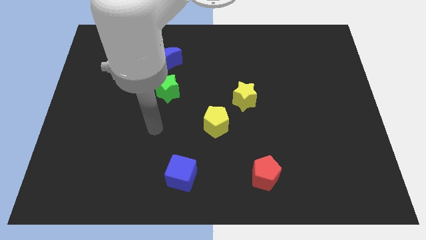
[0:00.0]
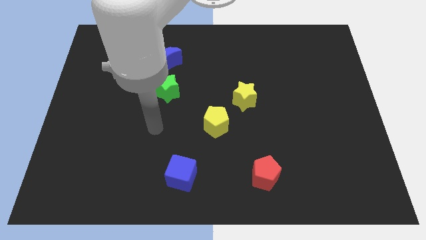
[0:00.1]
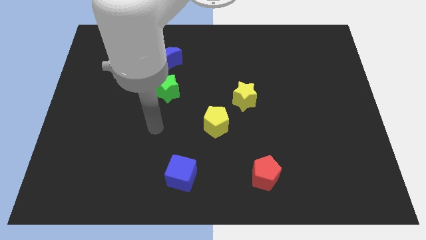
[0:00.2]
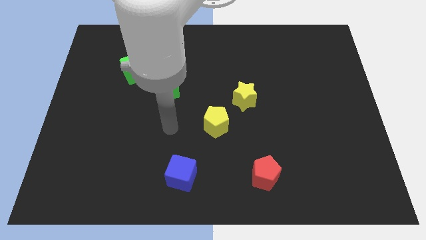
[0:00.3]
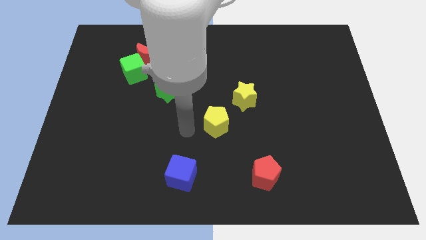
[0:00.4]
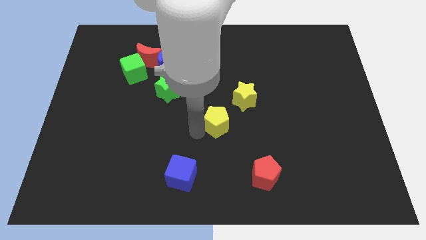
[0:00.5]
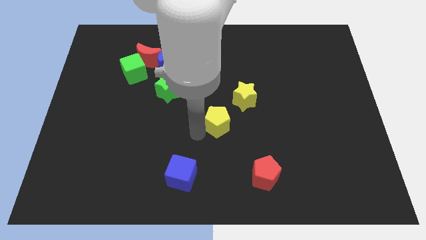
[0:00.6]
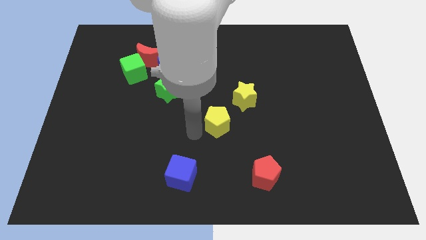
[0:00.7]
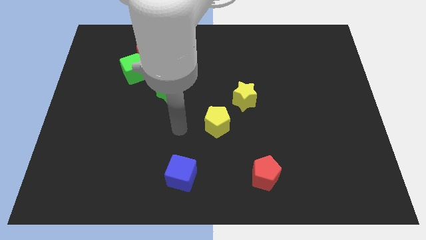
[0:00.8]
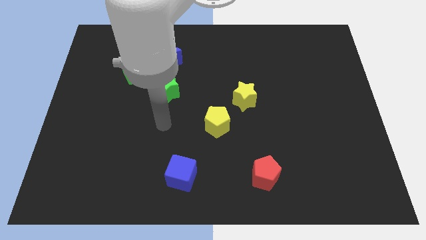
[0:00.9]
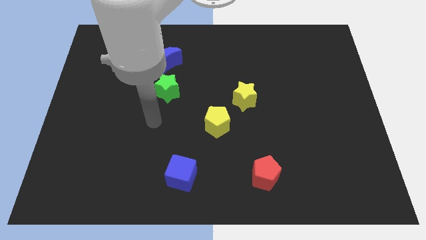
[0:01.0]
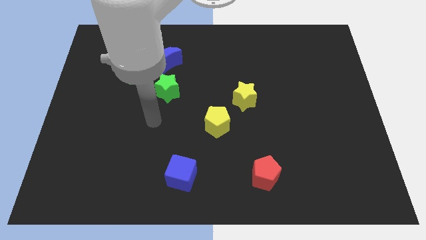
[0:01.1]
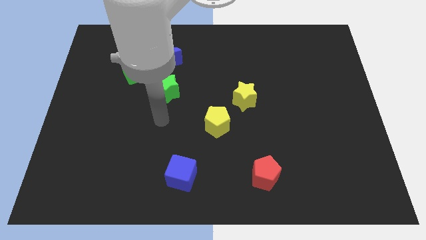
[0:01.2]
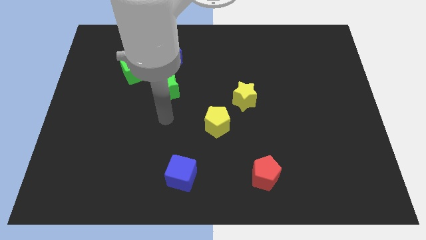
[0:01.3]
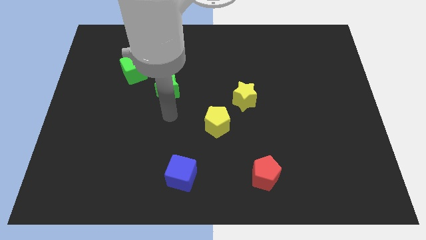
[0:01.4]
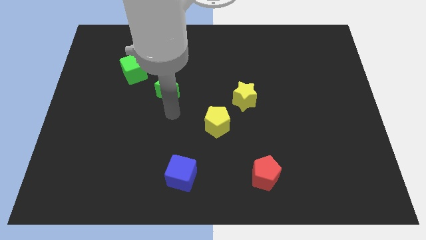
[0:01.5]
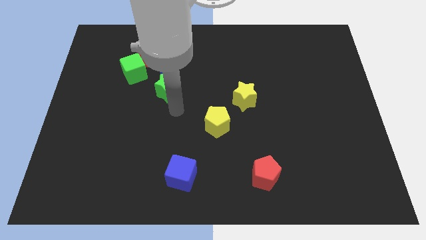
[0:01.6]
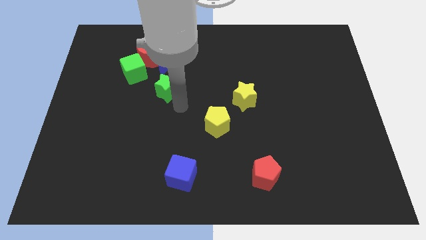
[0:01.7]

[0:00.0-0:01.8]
tap the left side of the yellow pentagon

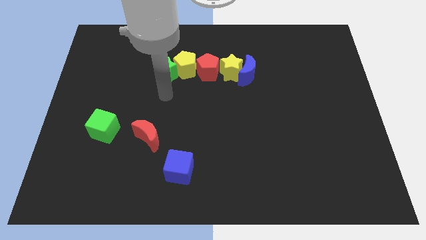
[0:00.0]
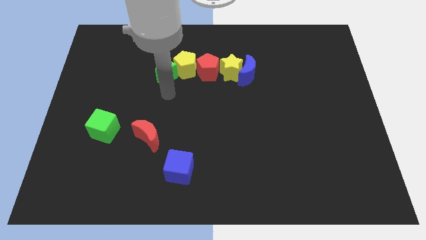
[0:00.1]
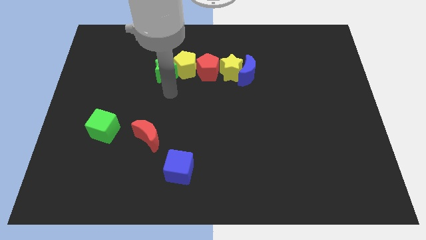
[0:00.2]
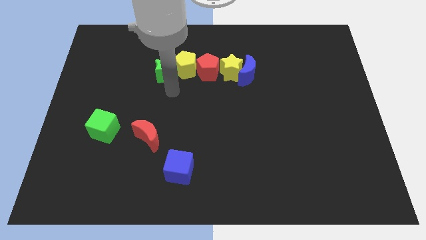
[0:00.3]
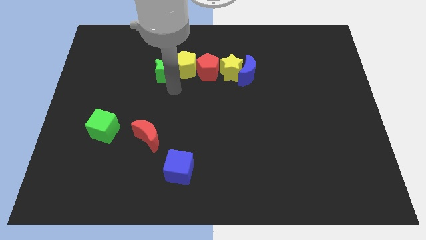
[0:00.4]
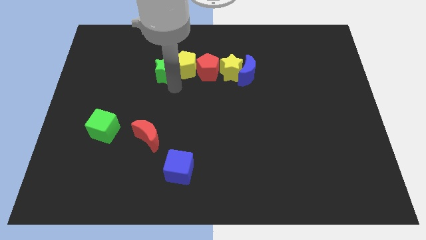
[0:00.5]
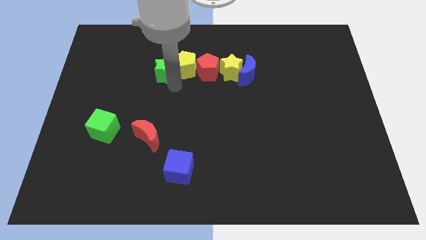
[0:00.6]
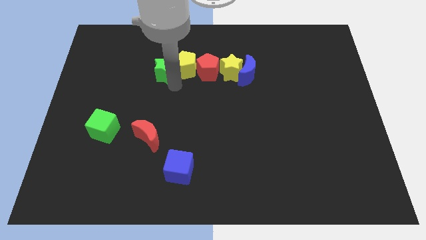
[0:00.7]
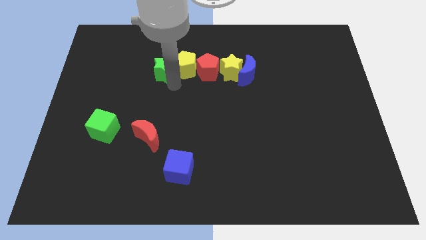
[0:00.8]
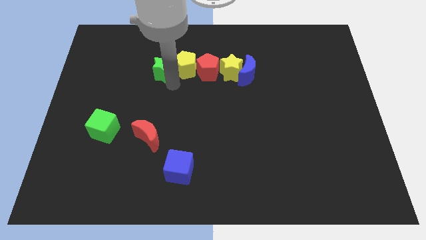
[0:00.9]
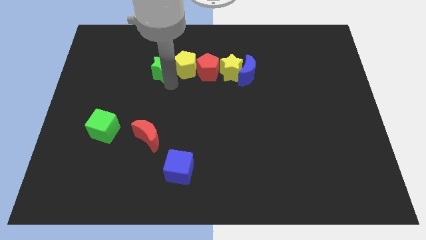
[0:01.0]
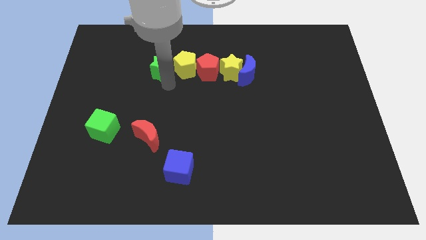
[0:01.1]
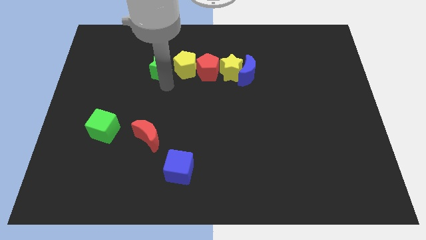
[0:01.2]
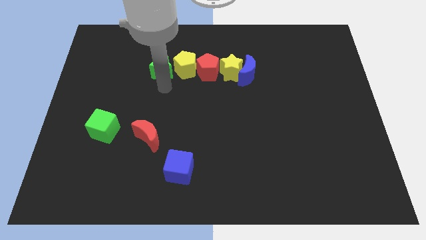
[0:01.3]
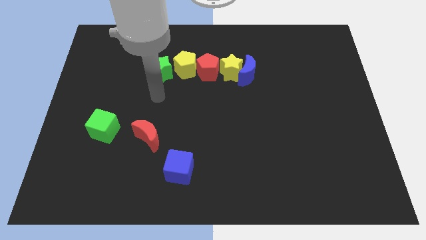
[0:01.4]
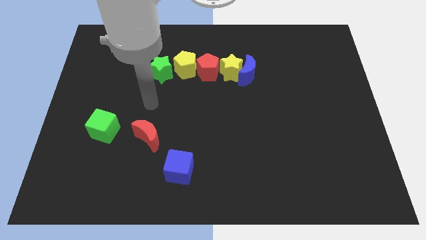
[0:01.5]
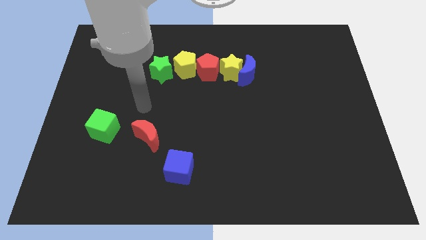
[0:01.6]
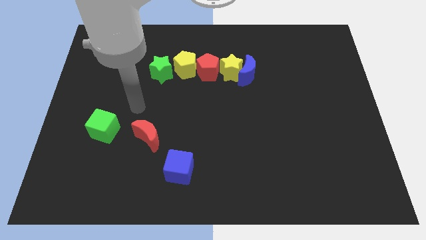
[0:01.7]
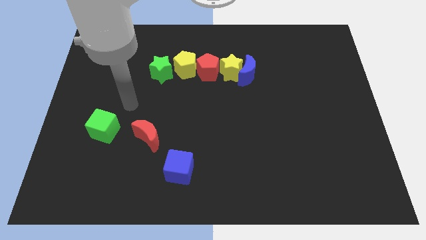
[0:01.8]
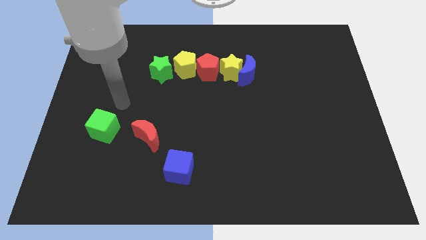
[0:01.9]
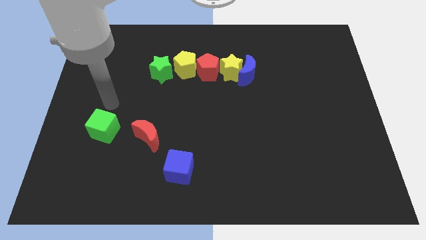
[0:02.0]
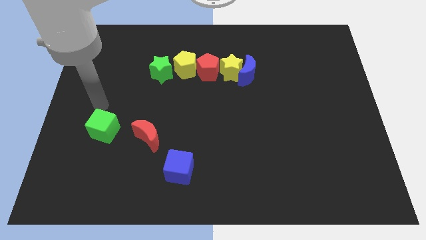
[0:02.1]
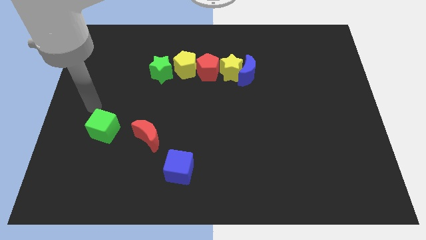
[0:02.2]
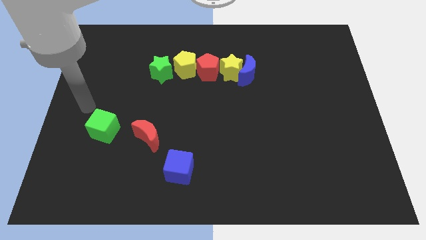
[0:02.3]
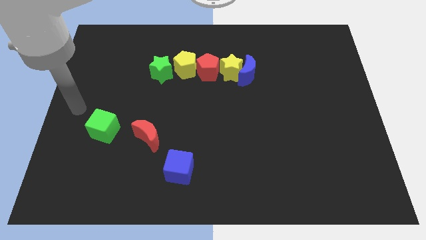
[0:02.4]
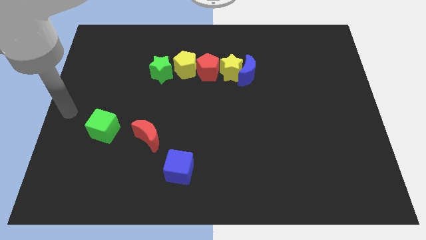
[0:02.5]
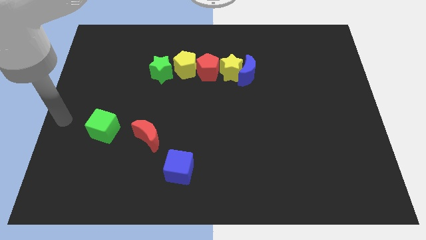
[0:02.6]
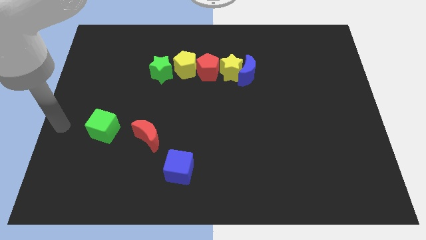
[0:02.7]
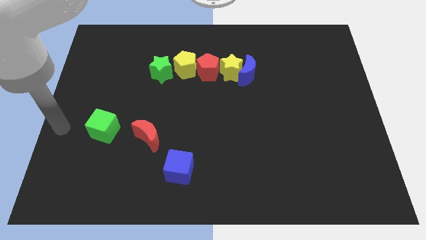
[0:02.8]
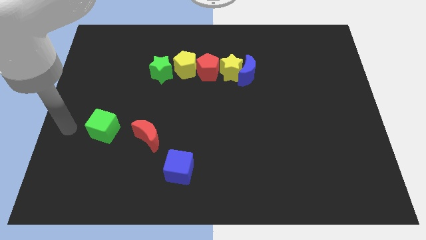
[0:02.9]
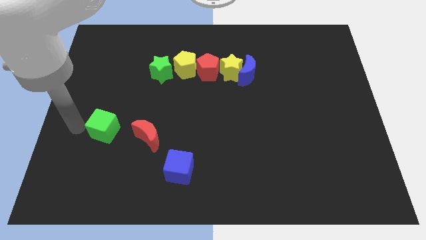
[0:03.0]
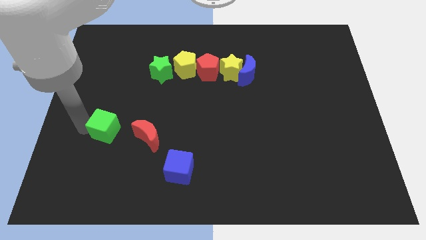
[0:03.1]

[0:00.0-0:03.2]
move the arm to the left of green cube

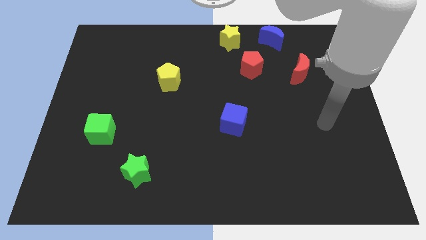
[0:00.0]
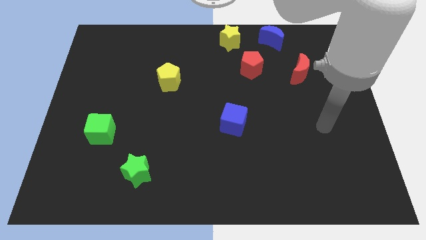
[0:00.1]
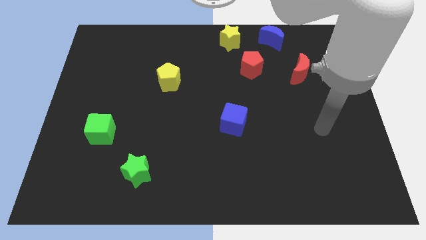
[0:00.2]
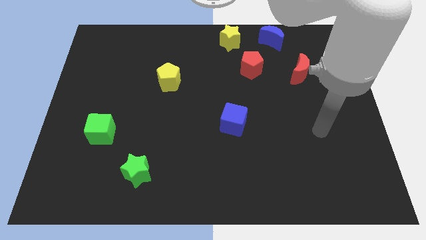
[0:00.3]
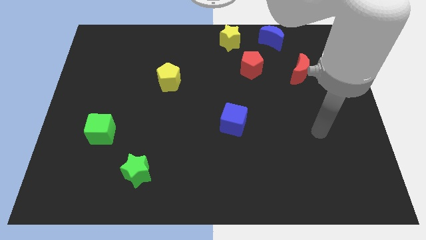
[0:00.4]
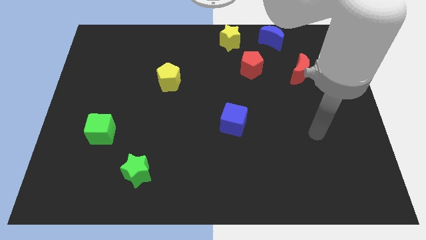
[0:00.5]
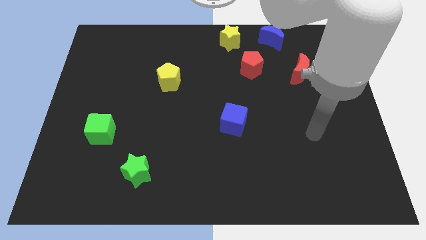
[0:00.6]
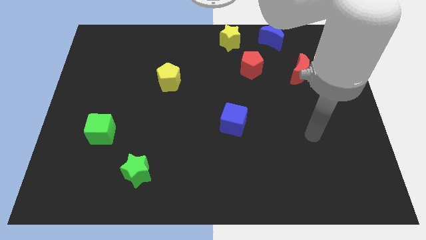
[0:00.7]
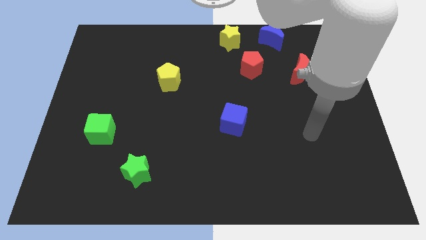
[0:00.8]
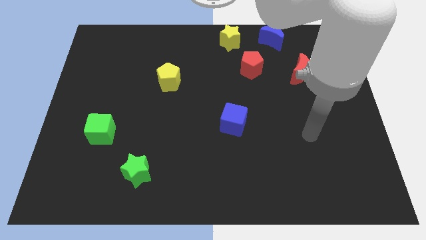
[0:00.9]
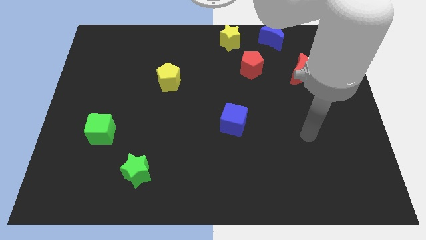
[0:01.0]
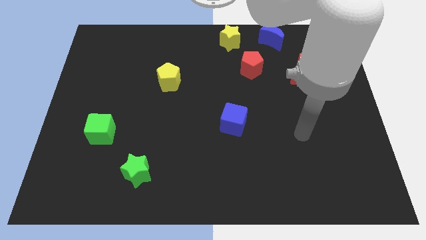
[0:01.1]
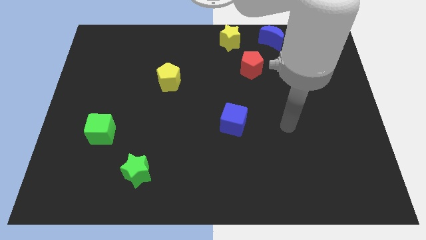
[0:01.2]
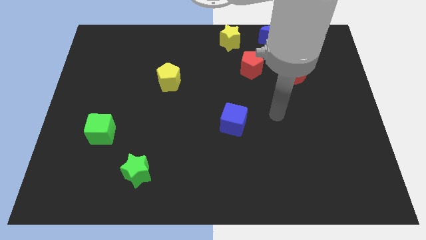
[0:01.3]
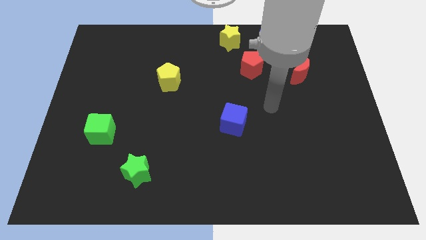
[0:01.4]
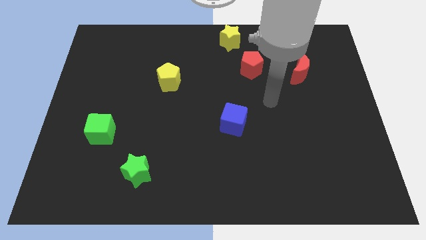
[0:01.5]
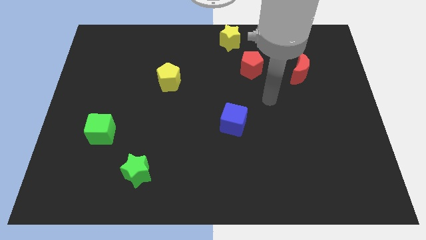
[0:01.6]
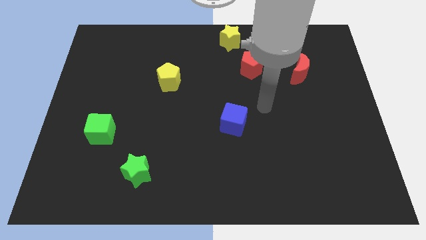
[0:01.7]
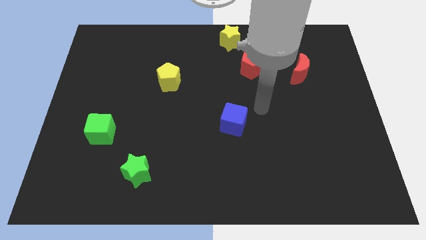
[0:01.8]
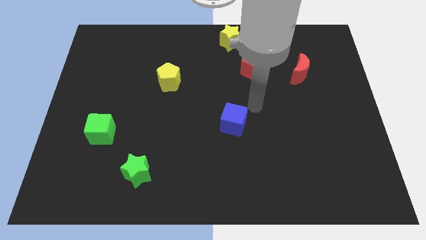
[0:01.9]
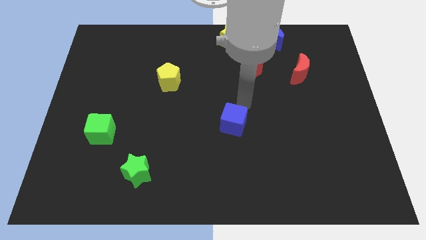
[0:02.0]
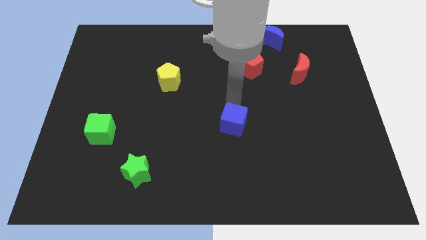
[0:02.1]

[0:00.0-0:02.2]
point the arm at the top of the blue cube

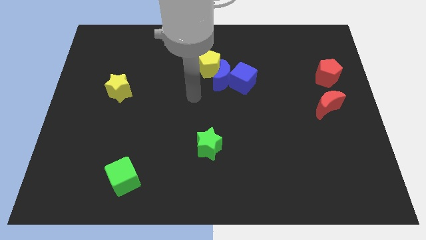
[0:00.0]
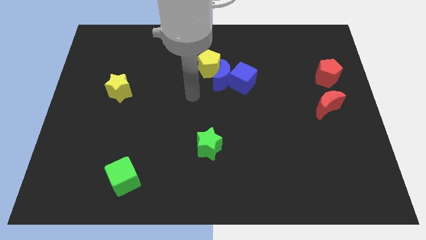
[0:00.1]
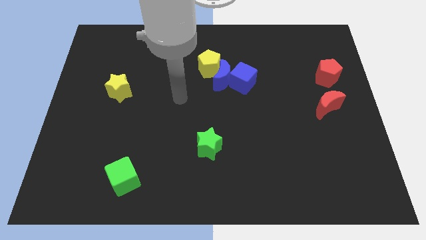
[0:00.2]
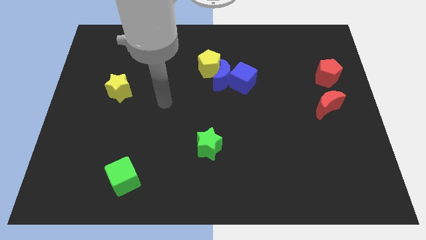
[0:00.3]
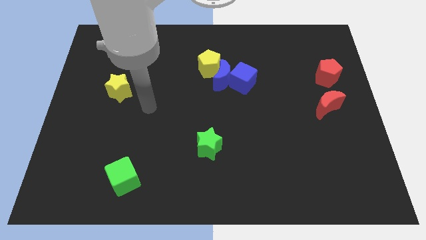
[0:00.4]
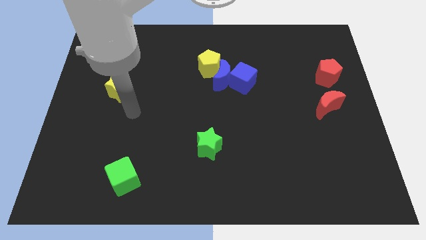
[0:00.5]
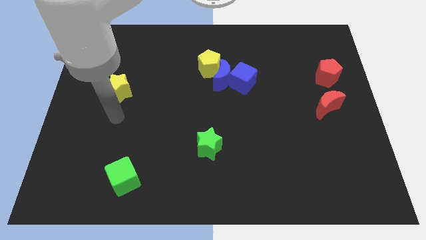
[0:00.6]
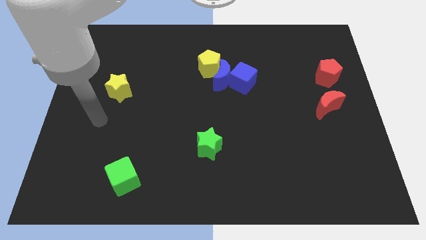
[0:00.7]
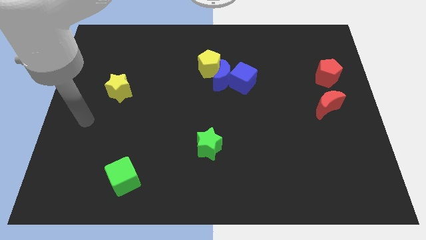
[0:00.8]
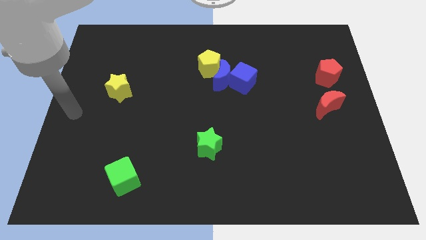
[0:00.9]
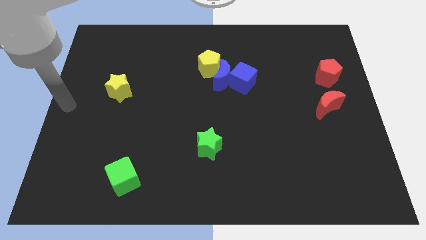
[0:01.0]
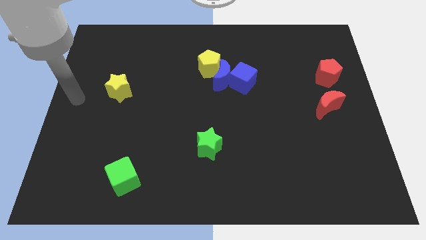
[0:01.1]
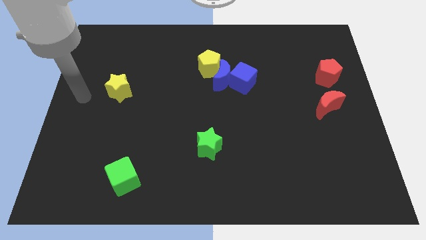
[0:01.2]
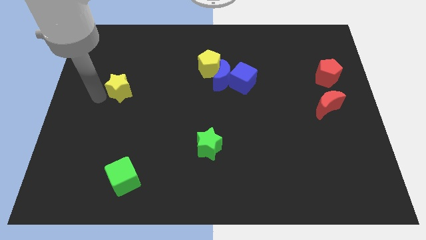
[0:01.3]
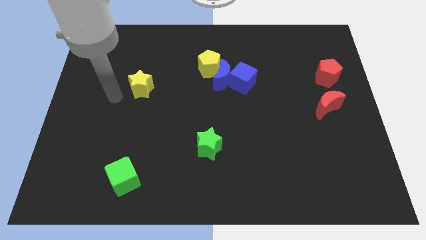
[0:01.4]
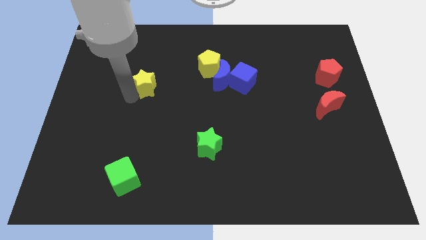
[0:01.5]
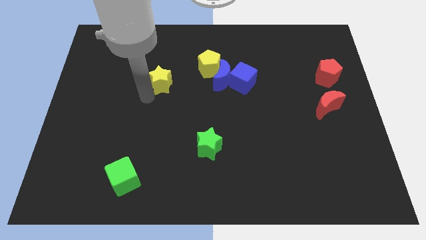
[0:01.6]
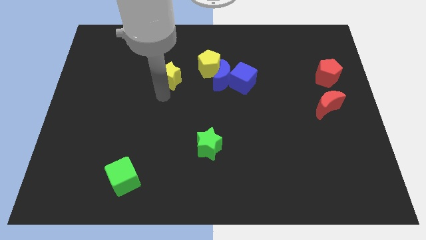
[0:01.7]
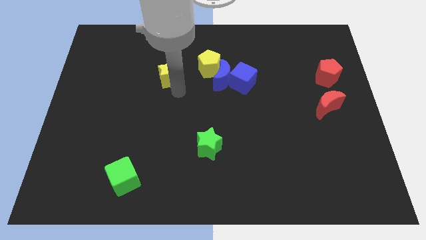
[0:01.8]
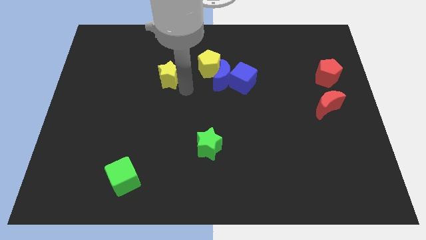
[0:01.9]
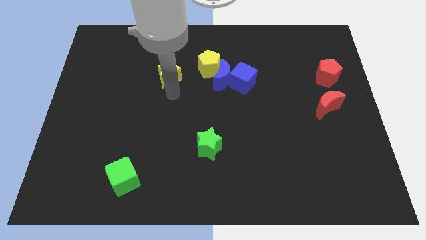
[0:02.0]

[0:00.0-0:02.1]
push the yellow star to the right
